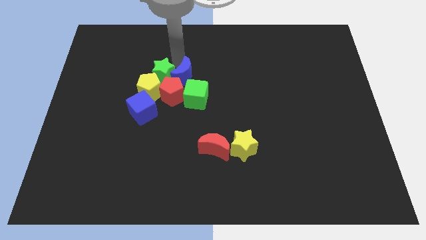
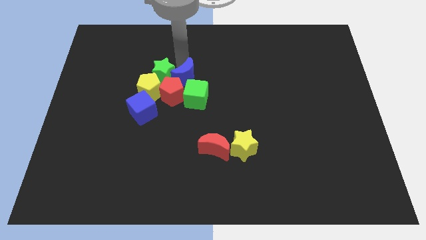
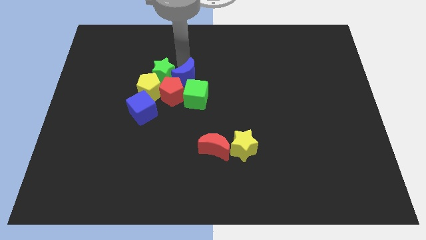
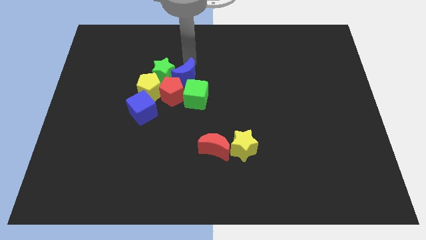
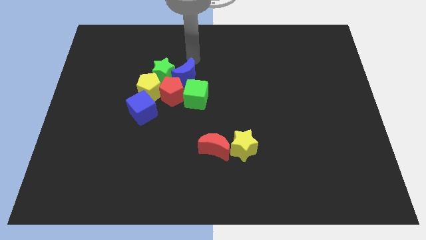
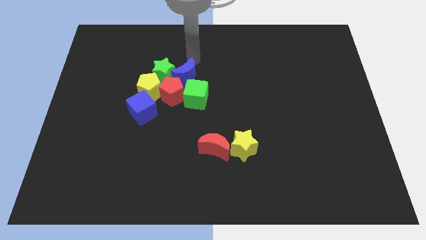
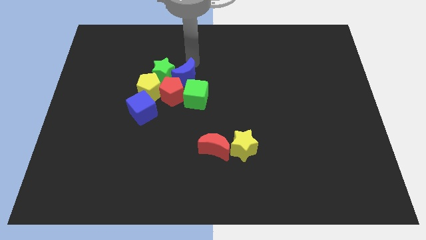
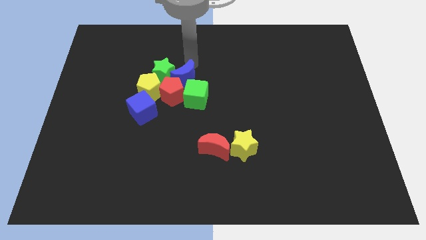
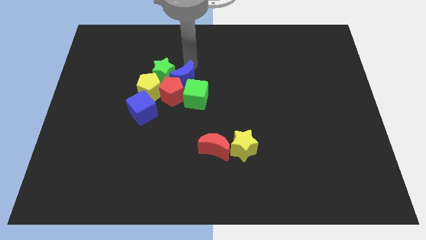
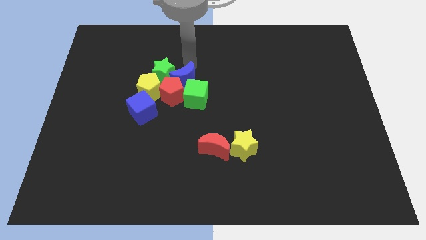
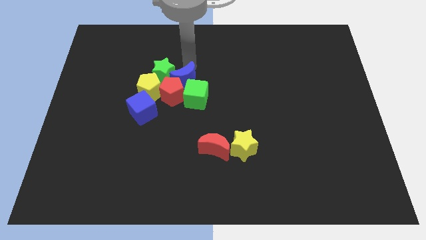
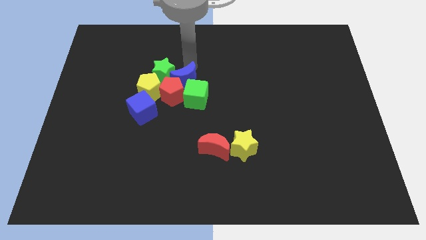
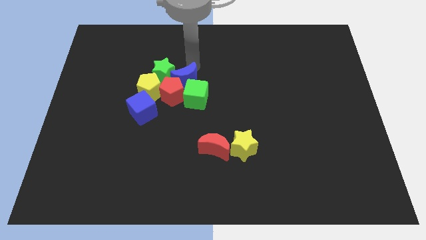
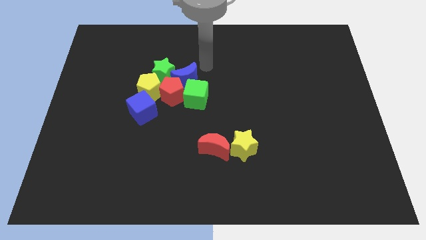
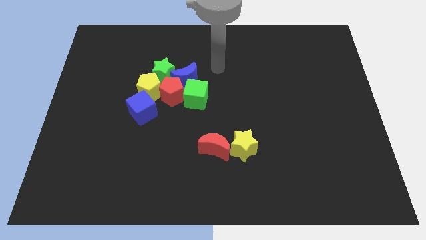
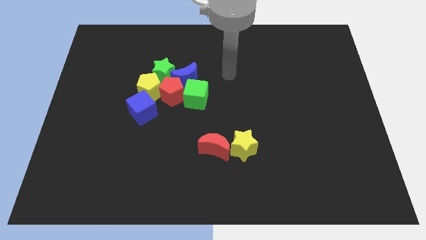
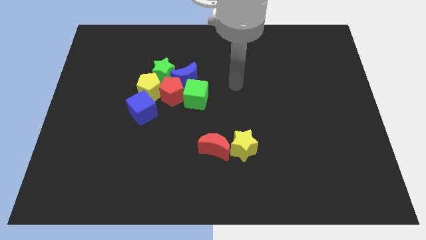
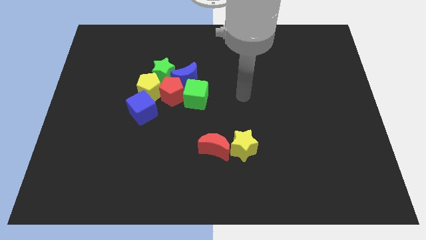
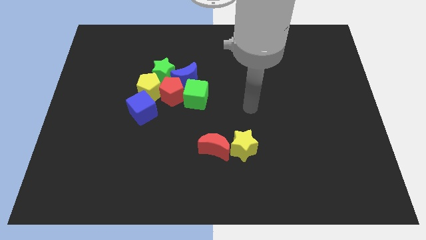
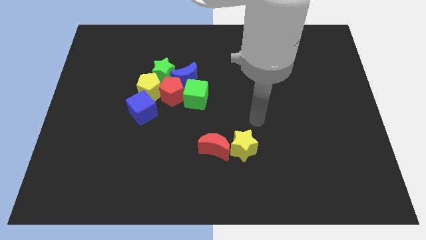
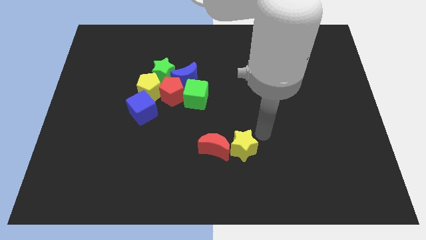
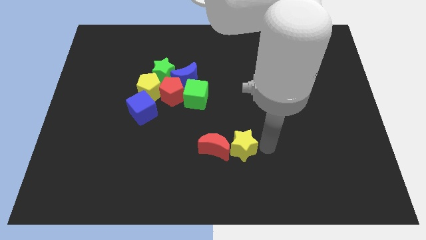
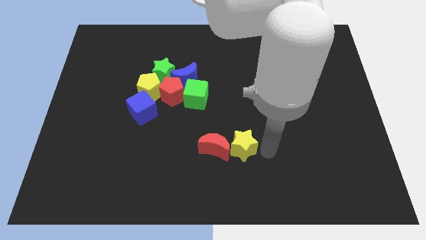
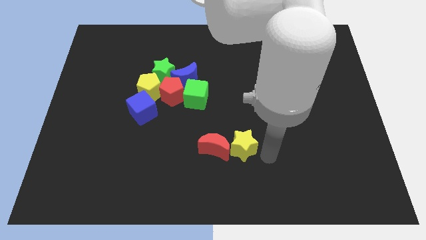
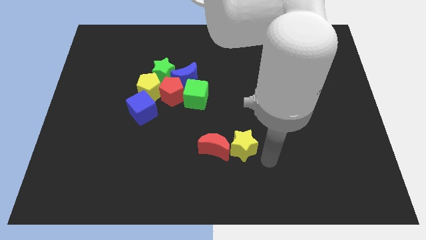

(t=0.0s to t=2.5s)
push the blue crescent into the green cube

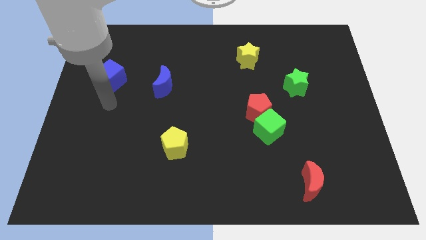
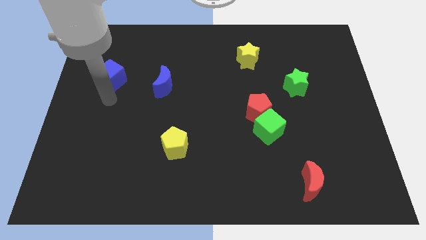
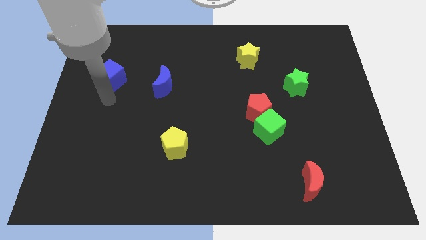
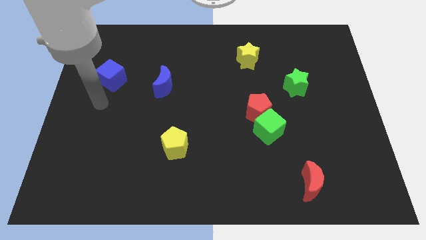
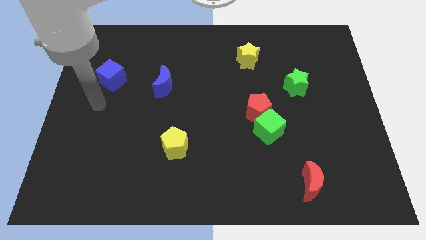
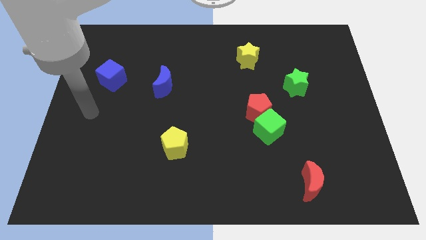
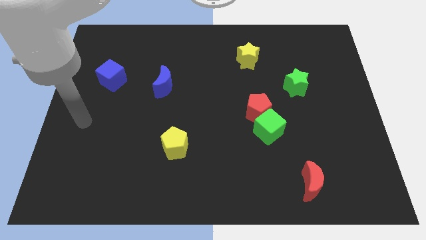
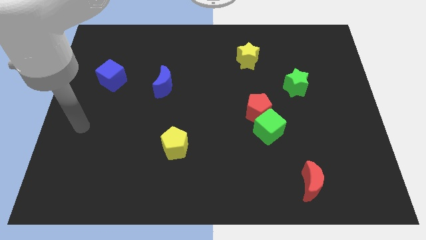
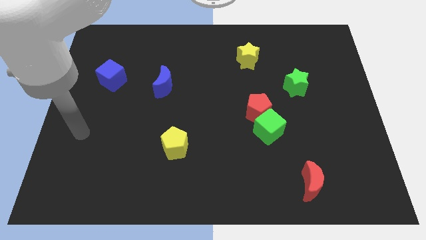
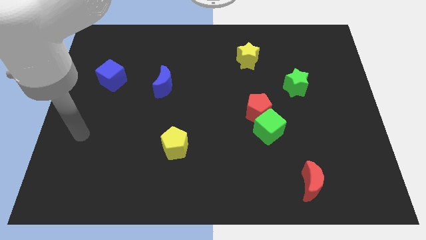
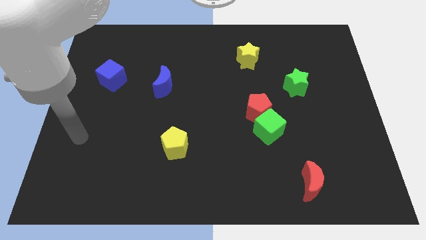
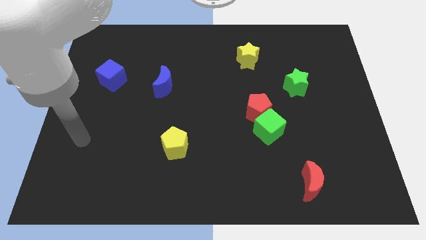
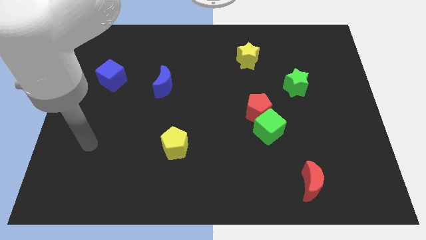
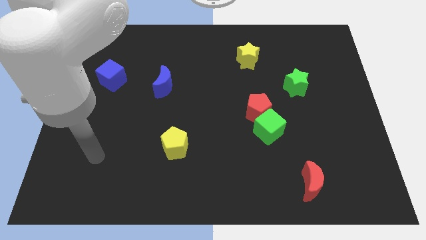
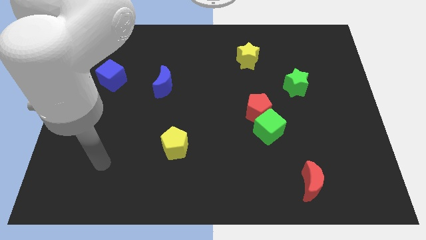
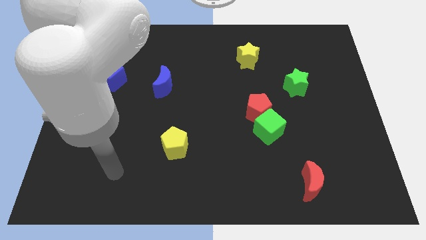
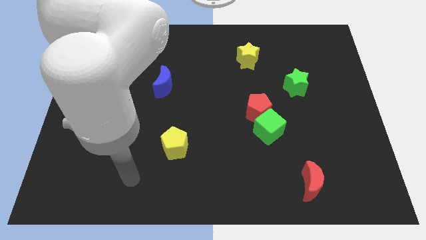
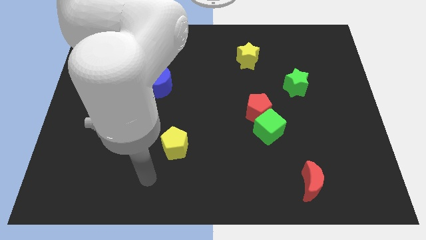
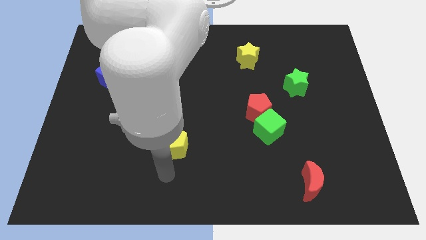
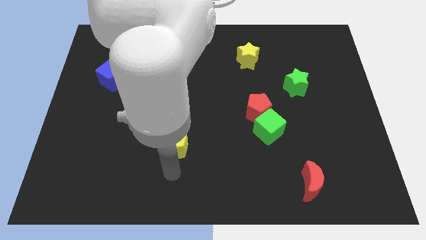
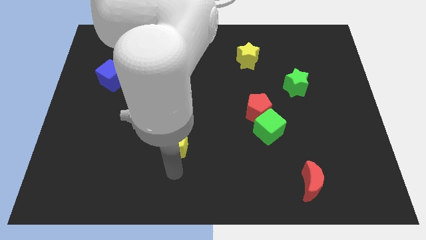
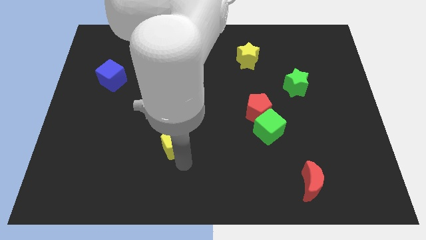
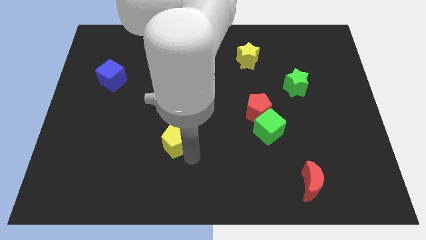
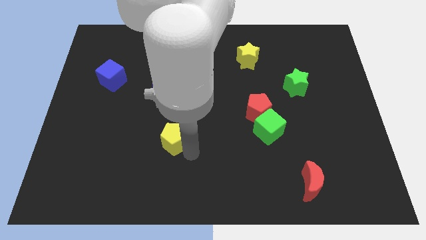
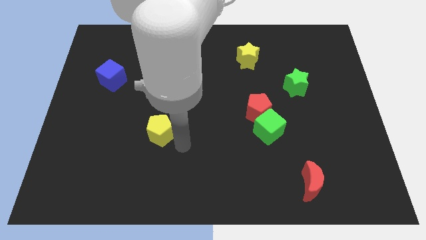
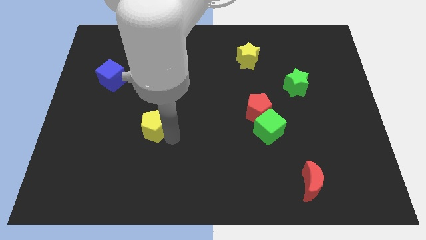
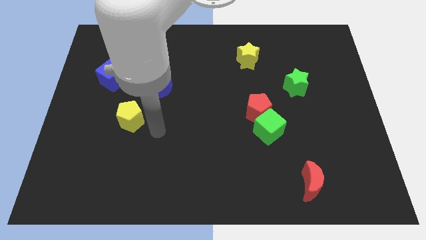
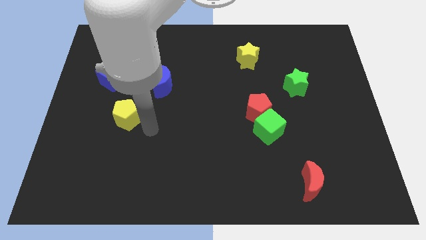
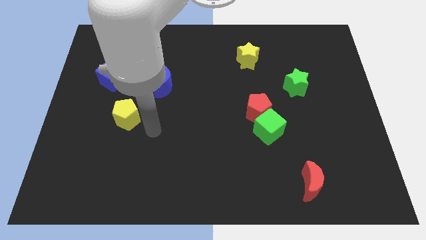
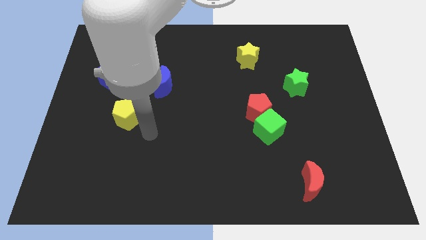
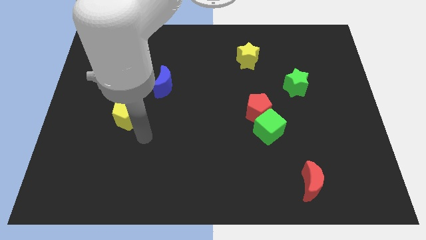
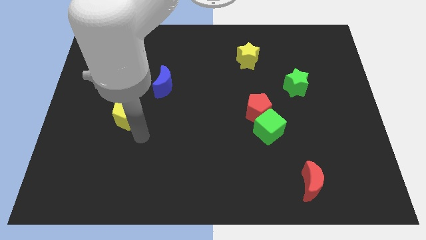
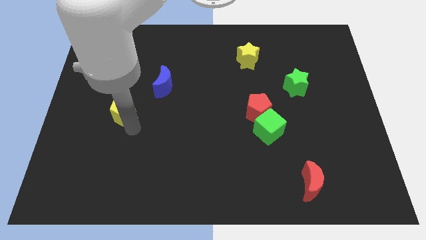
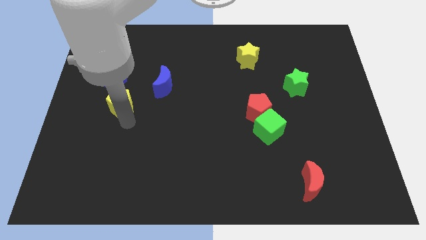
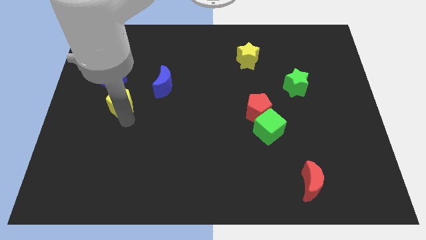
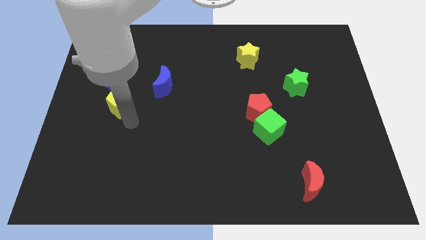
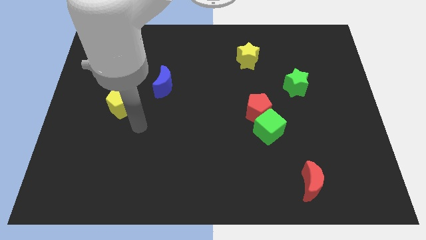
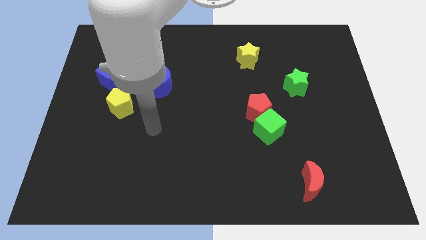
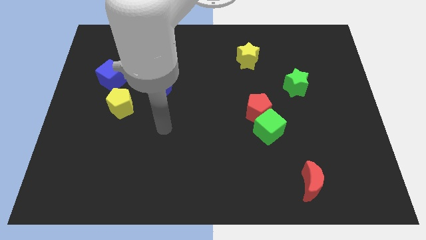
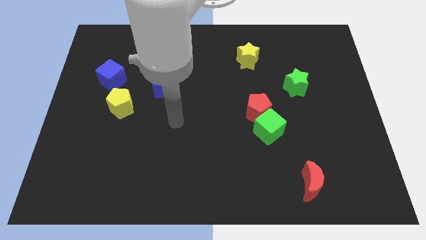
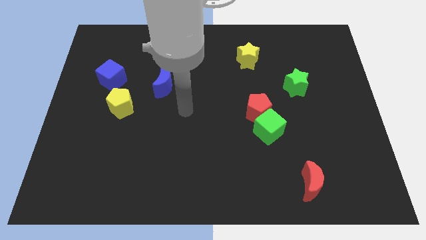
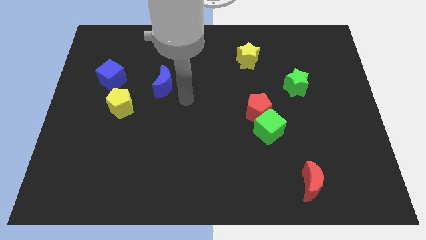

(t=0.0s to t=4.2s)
put the yellow pentagon underneath the blue cube

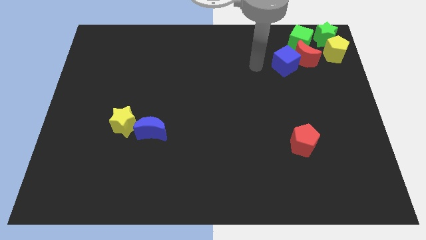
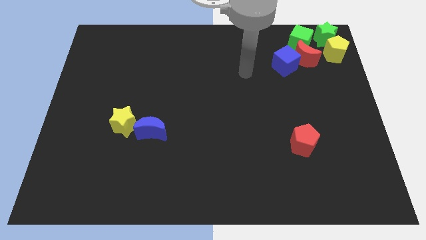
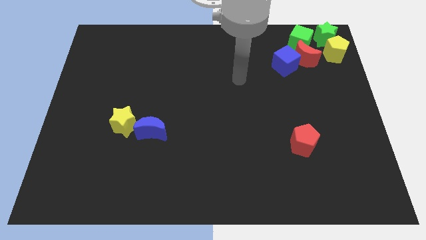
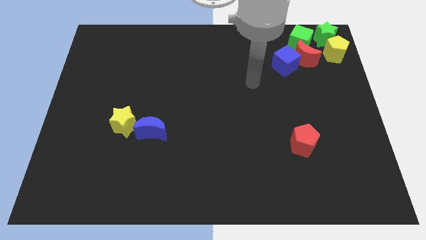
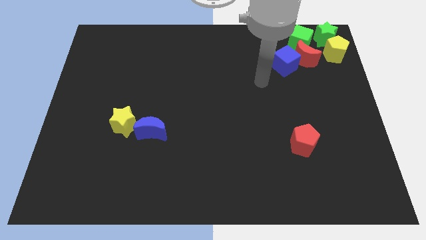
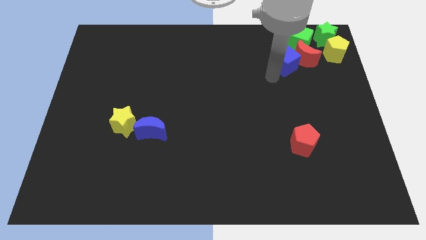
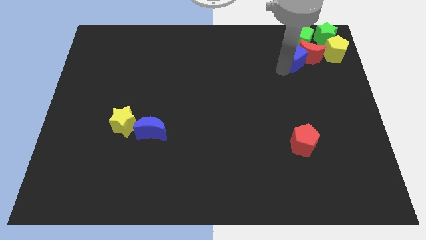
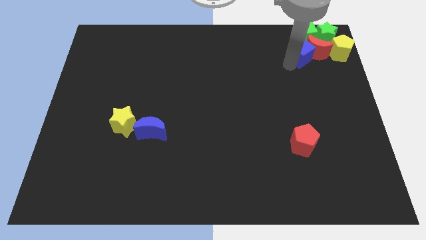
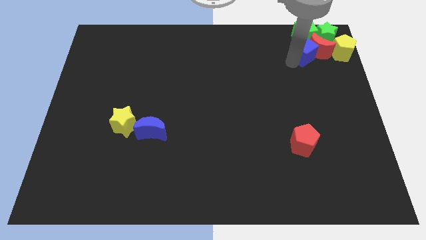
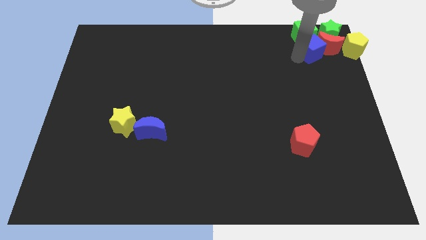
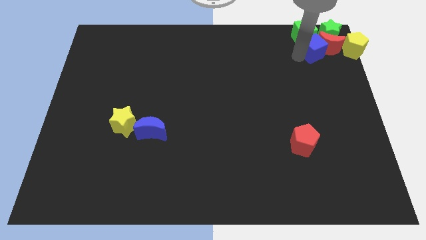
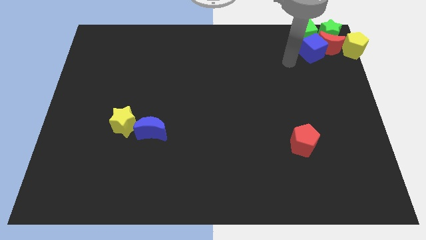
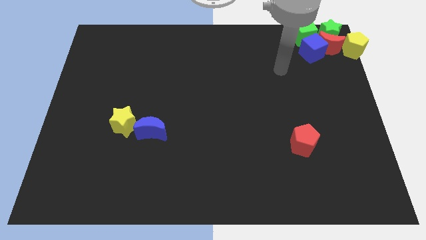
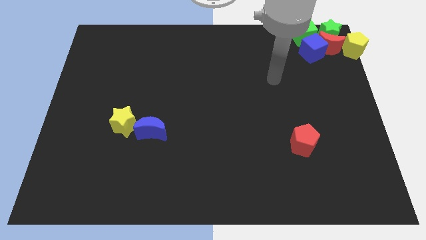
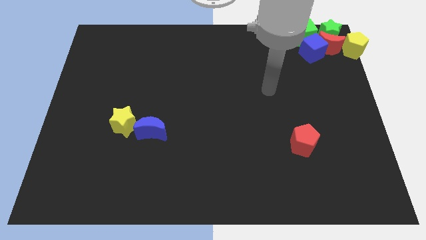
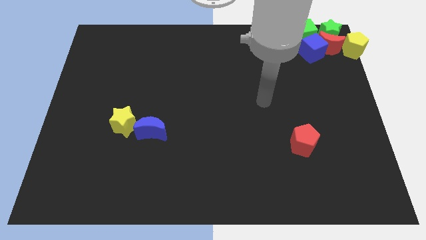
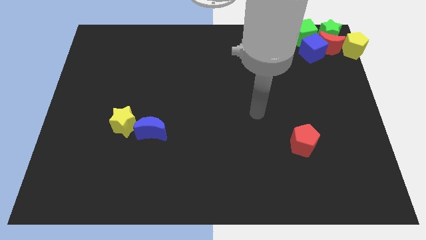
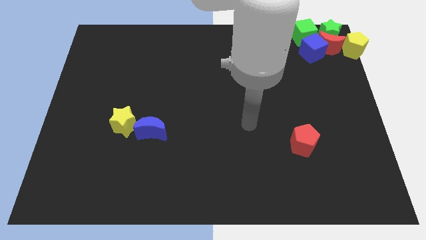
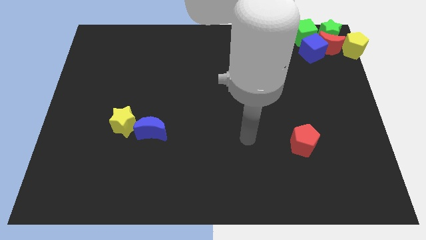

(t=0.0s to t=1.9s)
push a group of objects towards the right corner of the board

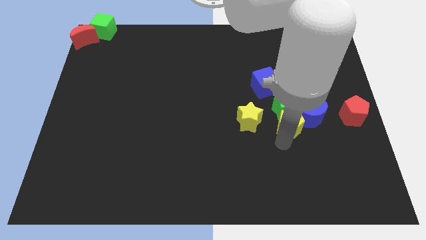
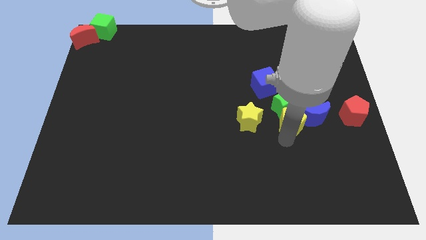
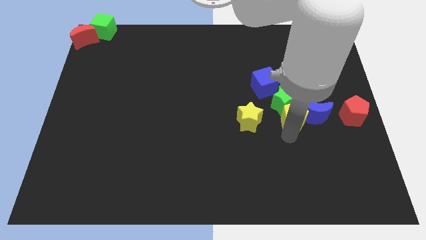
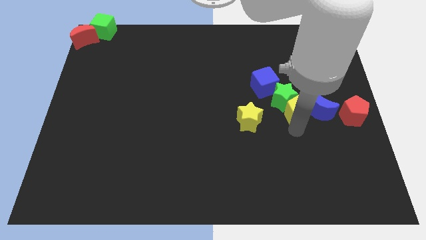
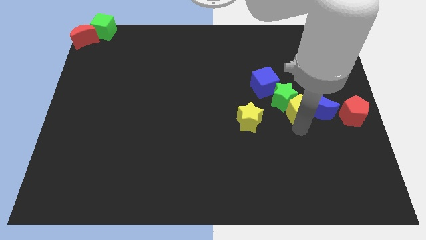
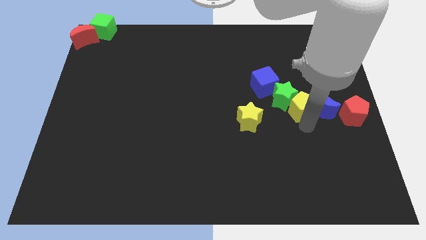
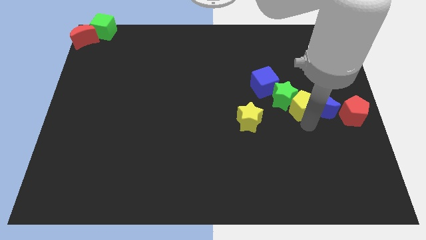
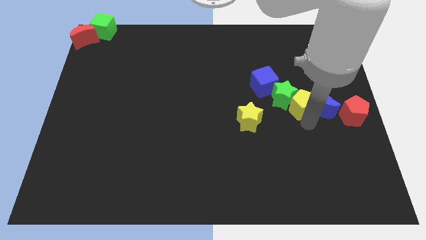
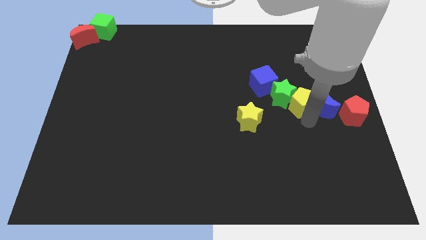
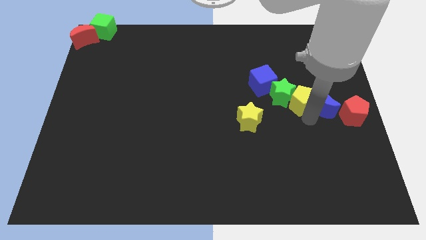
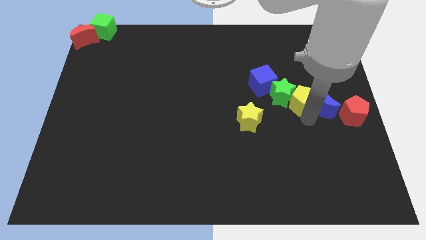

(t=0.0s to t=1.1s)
move the yellow pentagon in between green star and blue crescent
